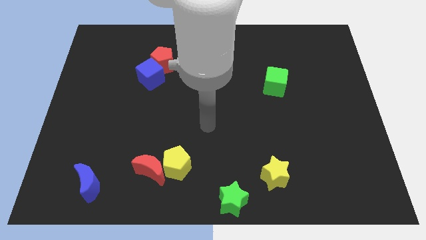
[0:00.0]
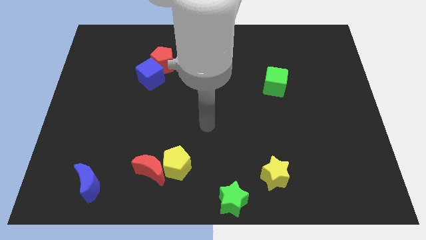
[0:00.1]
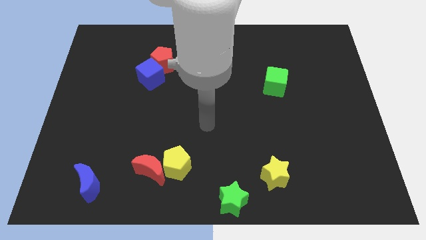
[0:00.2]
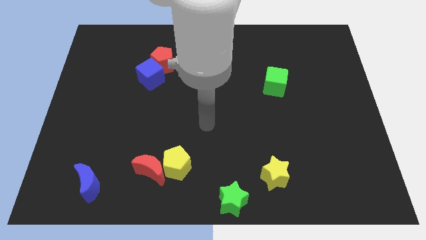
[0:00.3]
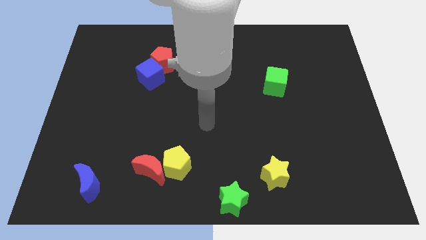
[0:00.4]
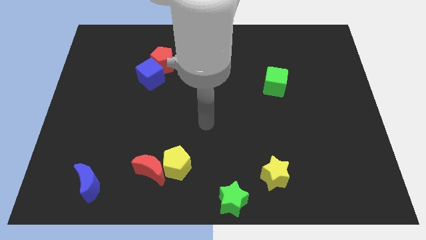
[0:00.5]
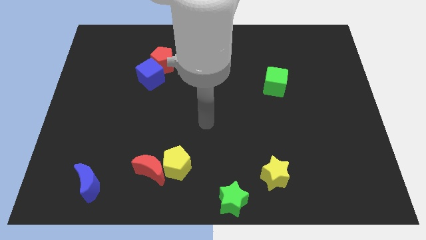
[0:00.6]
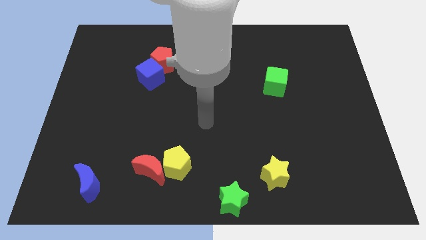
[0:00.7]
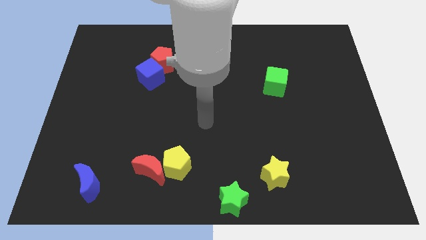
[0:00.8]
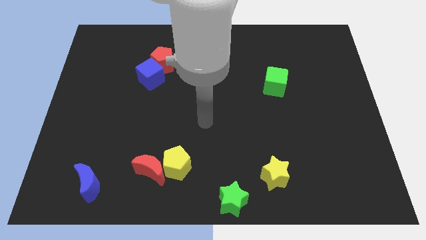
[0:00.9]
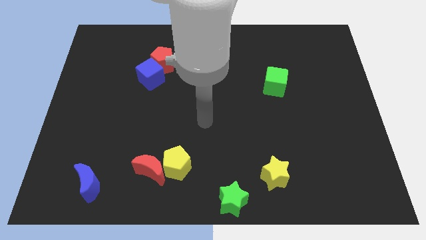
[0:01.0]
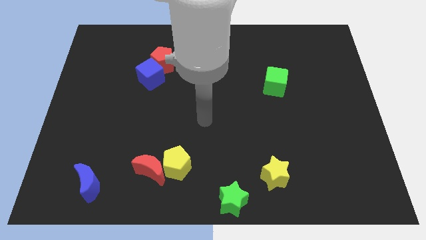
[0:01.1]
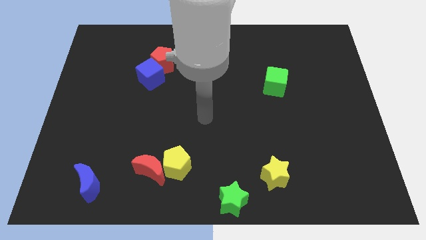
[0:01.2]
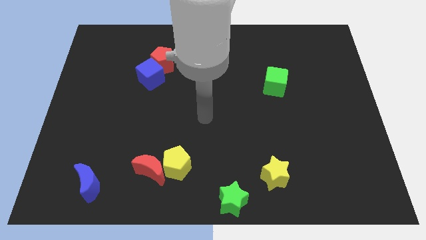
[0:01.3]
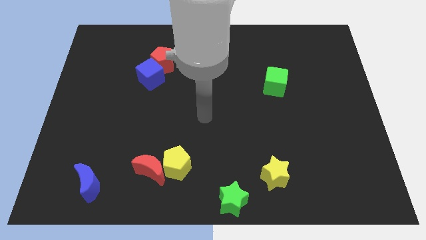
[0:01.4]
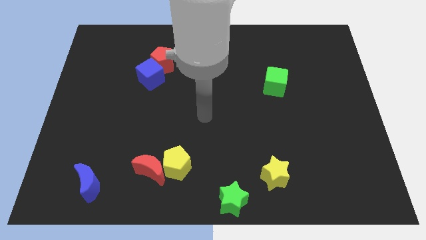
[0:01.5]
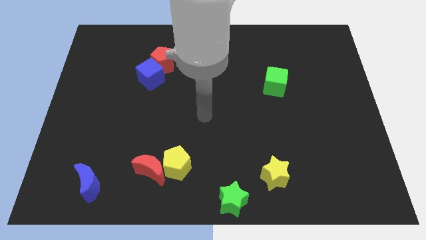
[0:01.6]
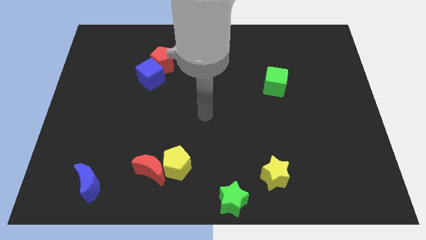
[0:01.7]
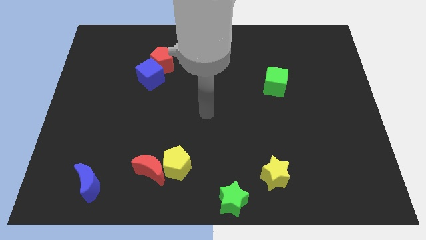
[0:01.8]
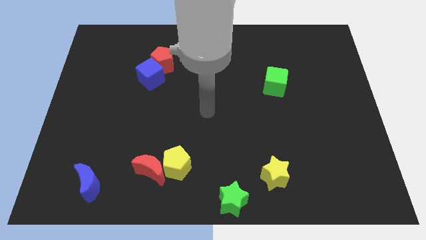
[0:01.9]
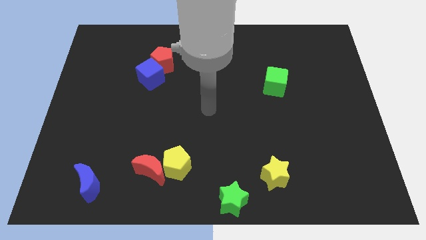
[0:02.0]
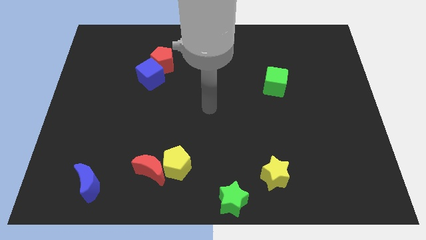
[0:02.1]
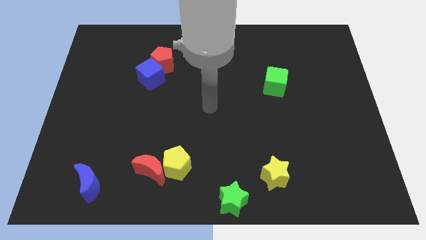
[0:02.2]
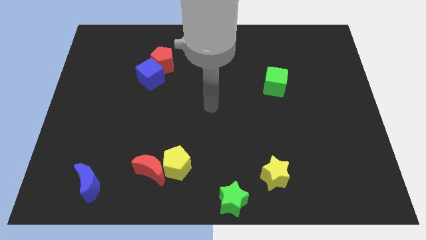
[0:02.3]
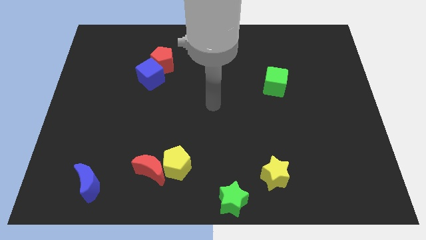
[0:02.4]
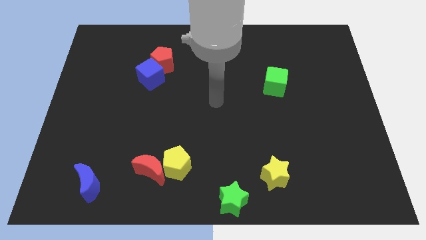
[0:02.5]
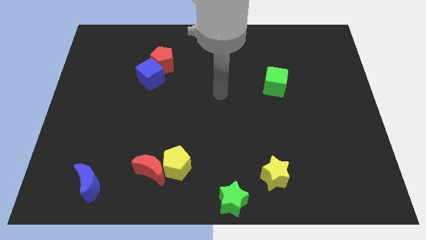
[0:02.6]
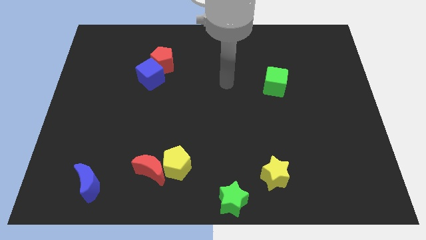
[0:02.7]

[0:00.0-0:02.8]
point the arm to the left of green cube

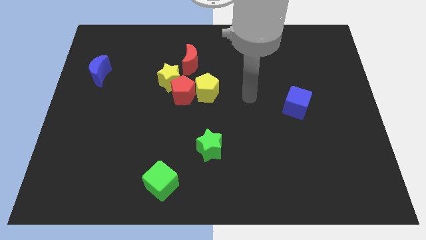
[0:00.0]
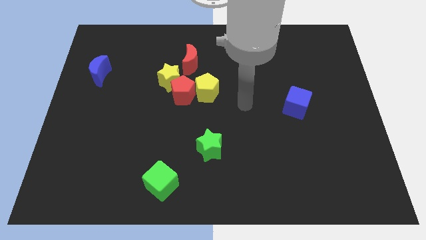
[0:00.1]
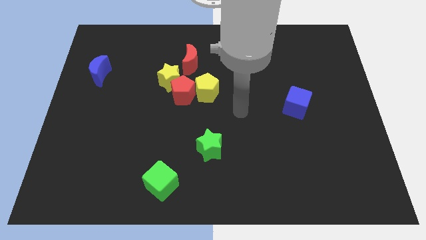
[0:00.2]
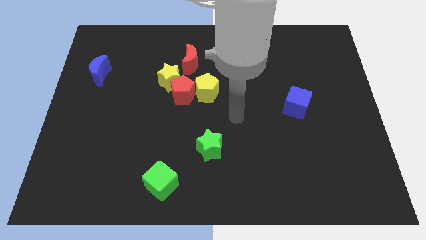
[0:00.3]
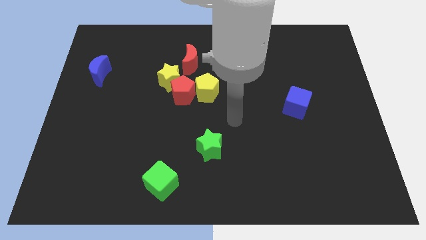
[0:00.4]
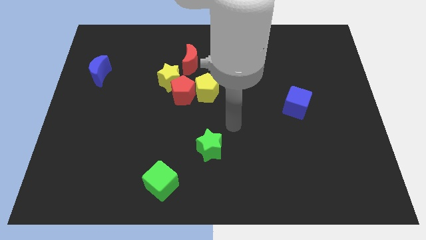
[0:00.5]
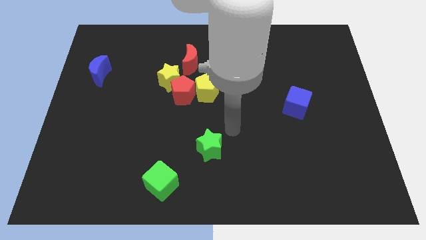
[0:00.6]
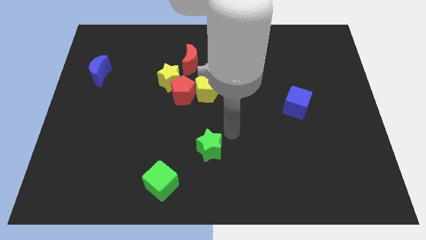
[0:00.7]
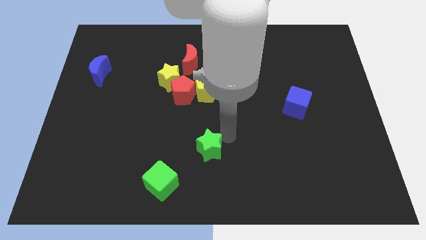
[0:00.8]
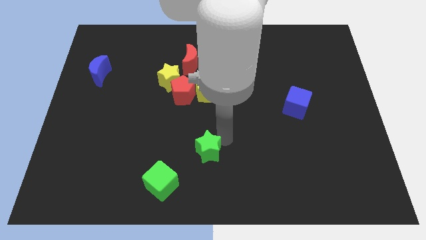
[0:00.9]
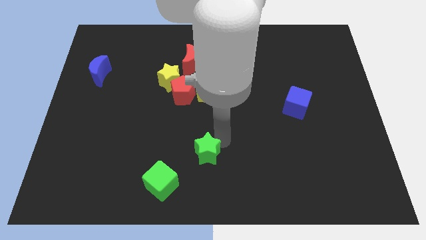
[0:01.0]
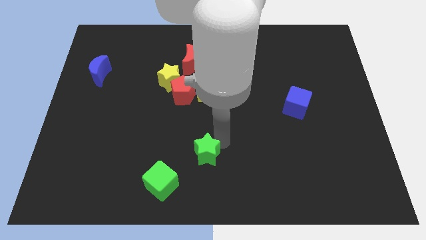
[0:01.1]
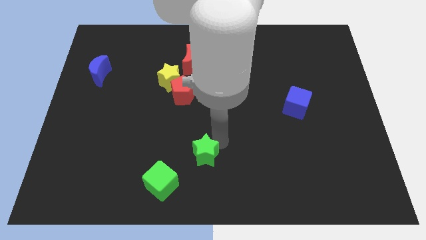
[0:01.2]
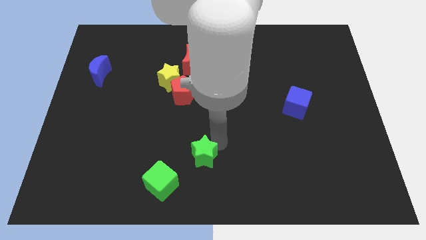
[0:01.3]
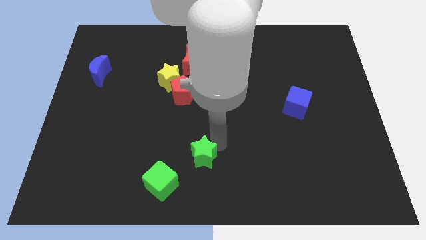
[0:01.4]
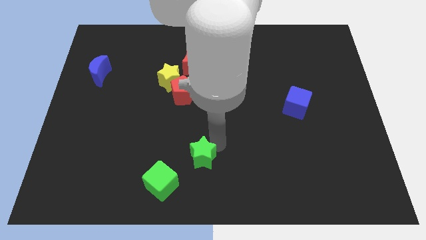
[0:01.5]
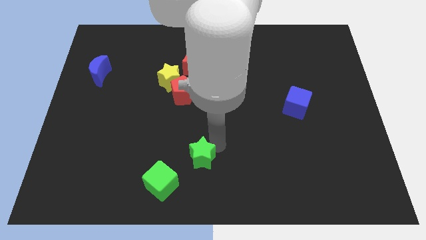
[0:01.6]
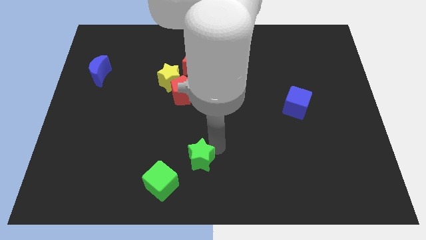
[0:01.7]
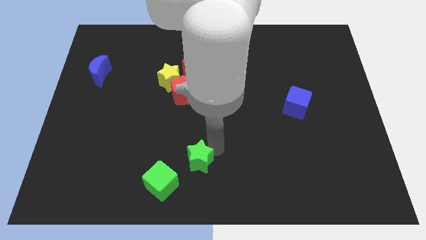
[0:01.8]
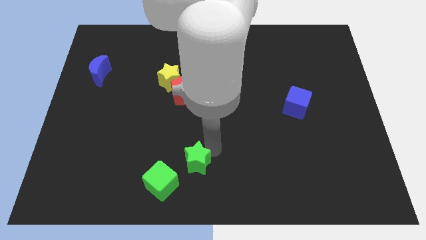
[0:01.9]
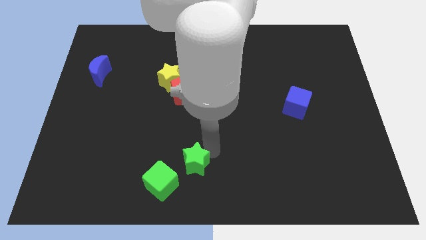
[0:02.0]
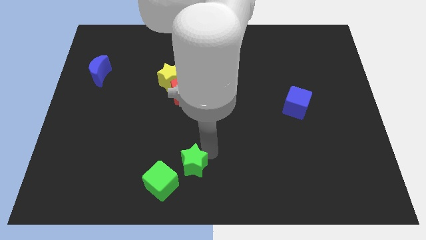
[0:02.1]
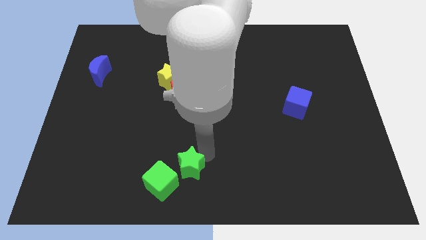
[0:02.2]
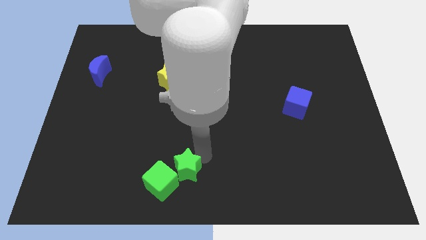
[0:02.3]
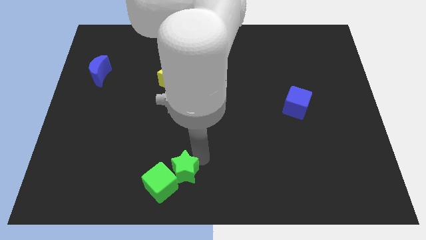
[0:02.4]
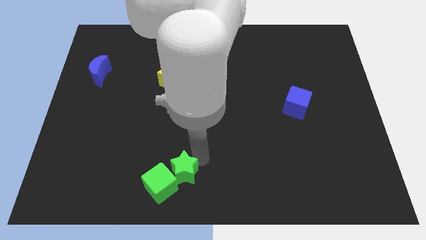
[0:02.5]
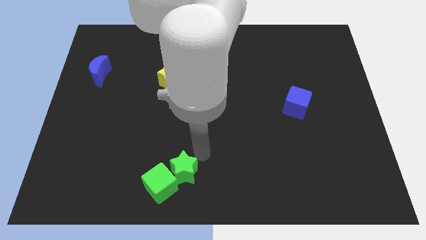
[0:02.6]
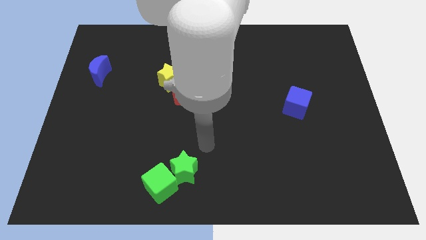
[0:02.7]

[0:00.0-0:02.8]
place the green star to right side of the green cube

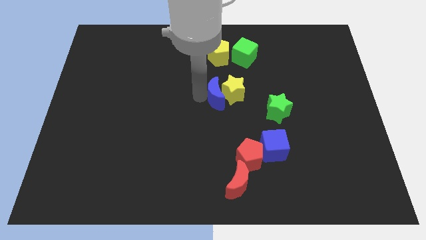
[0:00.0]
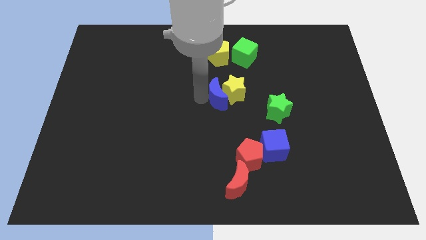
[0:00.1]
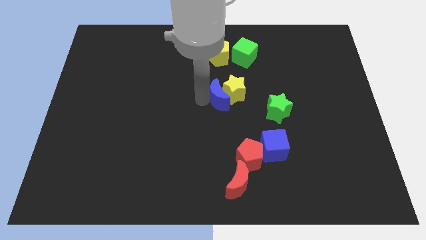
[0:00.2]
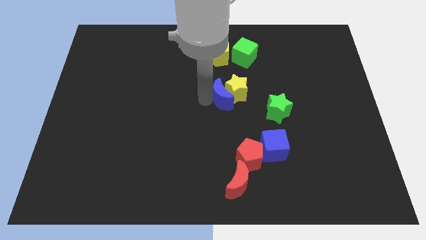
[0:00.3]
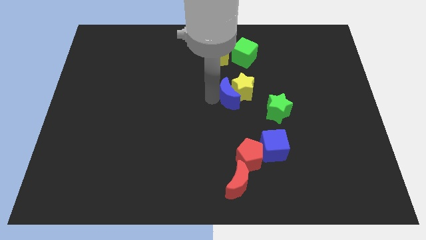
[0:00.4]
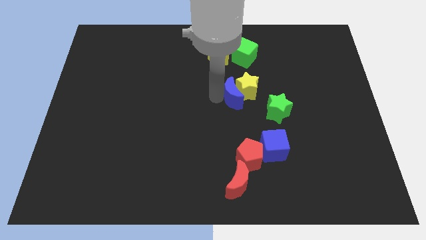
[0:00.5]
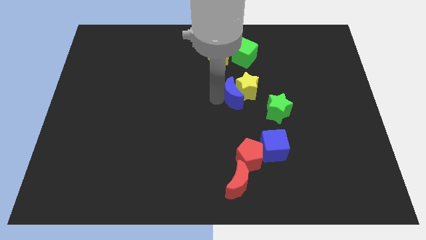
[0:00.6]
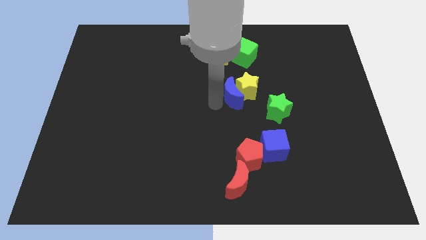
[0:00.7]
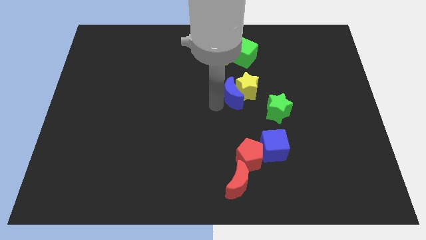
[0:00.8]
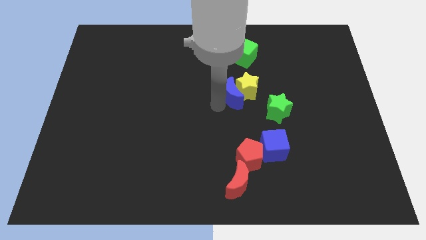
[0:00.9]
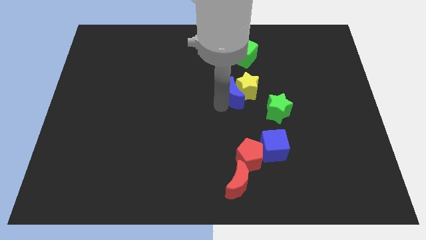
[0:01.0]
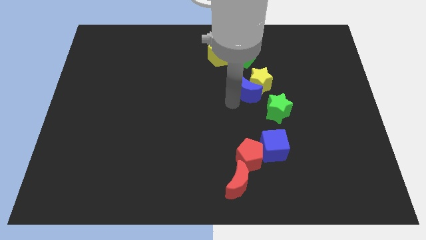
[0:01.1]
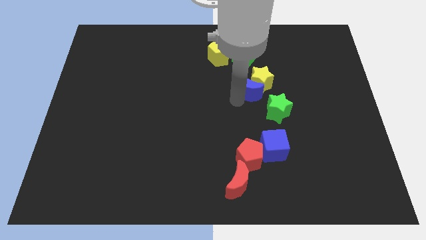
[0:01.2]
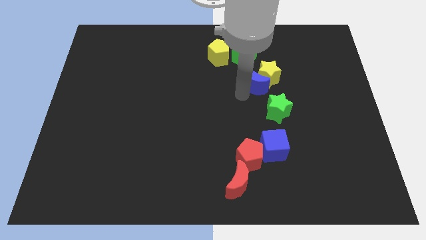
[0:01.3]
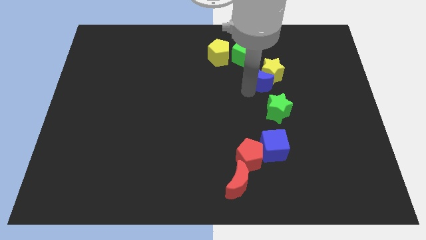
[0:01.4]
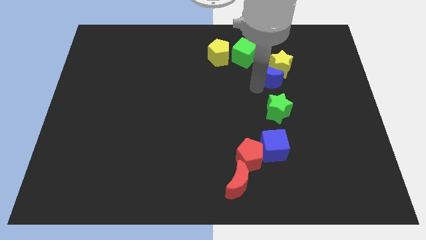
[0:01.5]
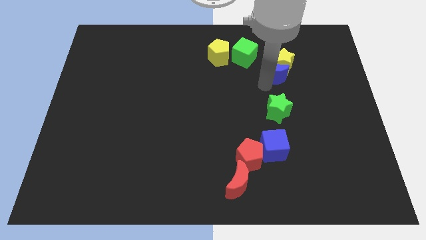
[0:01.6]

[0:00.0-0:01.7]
move blue crescent and yellow star together slightly to the top right side of the board

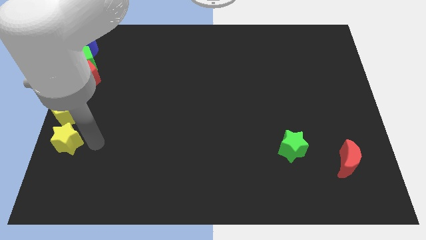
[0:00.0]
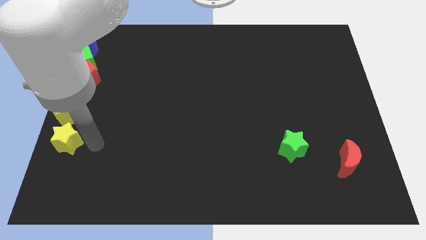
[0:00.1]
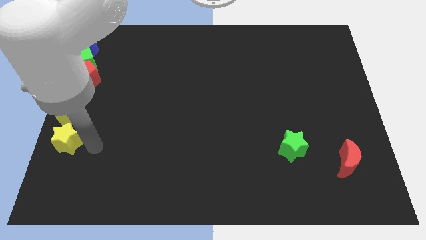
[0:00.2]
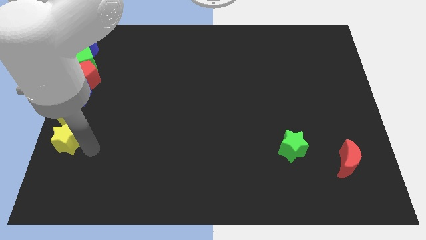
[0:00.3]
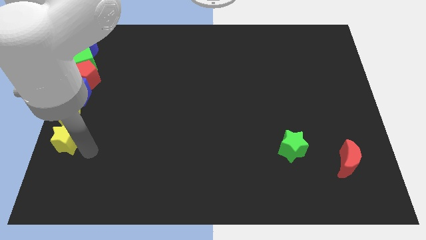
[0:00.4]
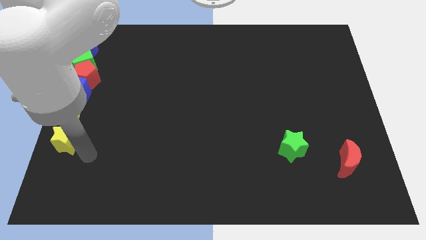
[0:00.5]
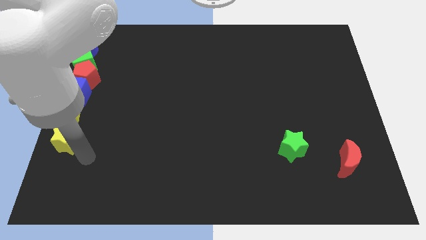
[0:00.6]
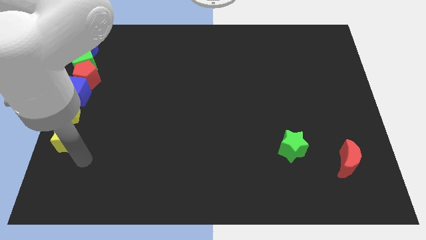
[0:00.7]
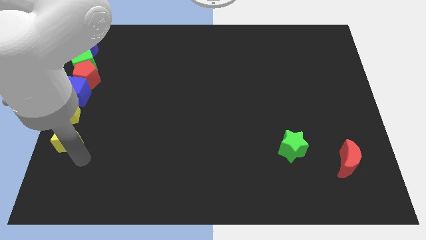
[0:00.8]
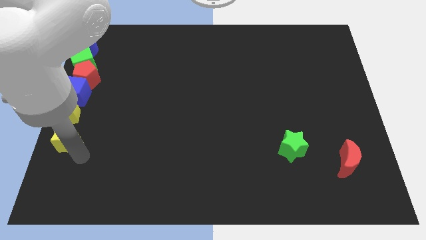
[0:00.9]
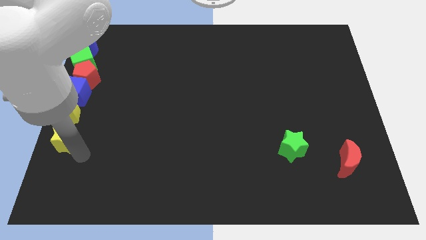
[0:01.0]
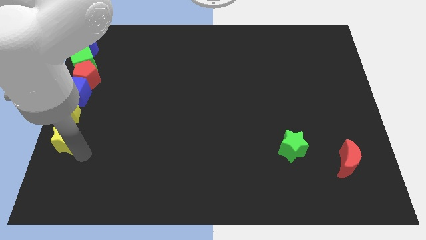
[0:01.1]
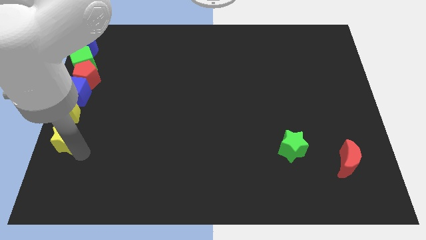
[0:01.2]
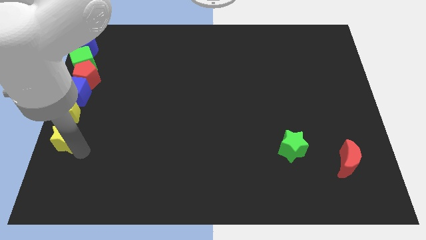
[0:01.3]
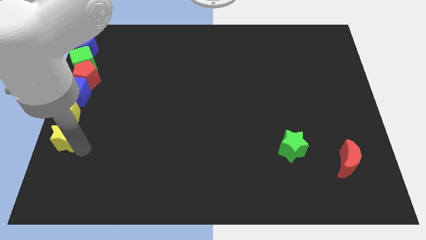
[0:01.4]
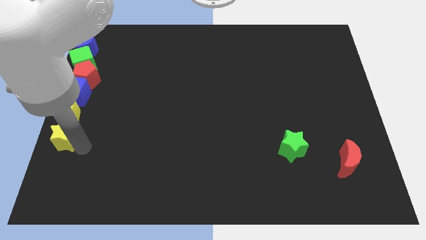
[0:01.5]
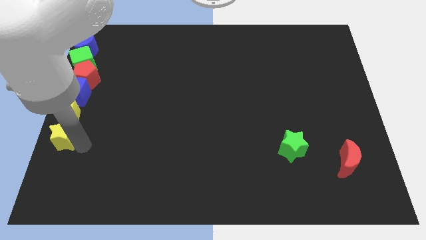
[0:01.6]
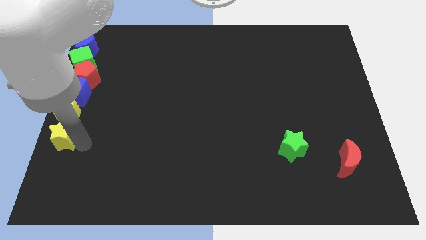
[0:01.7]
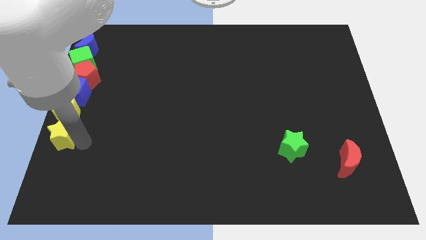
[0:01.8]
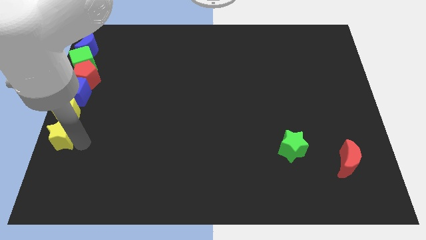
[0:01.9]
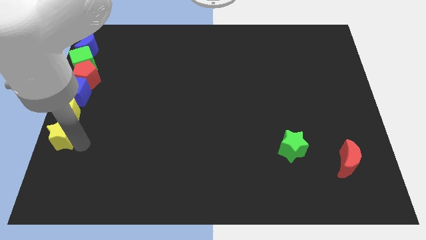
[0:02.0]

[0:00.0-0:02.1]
push the yellow star slightly towards the yellow pentagon
